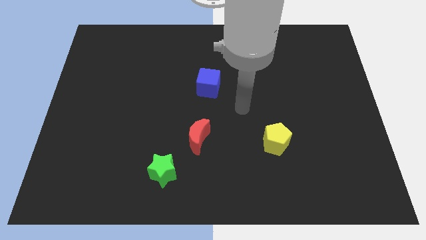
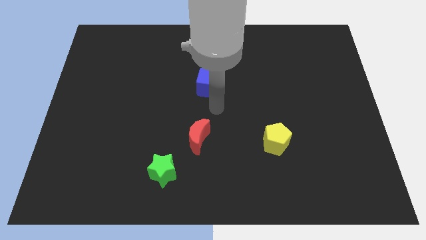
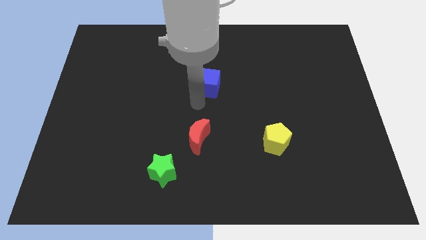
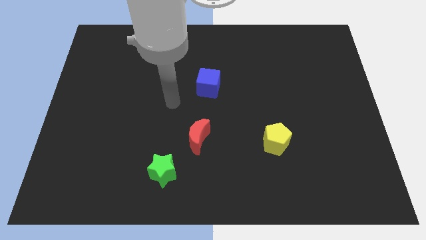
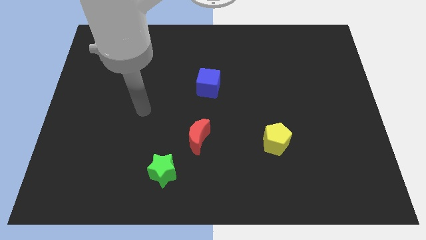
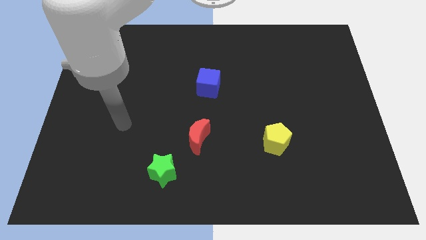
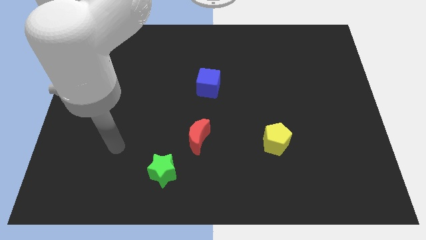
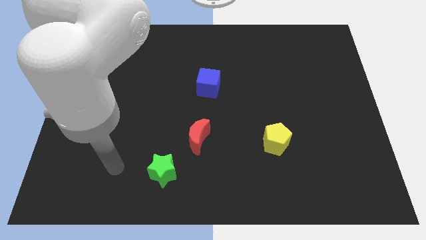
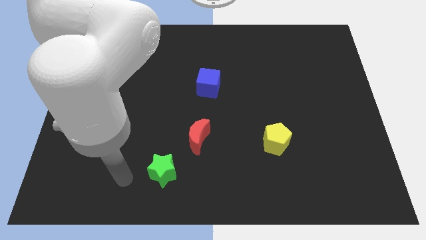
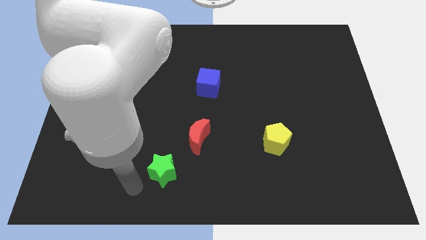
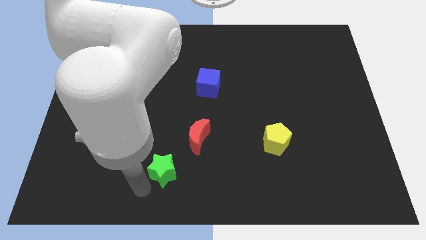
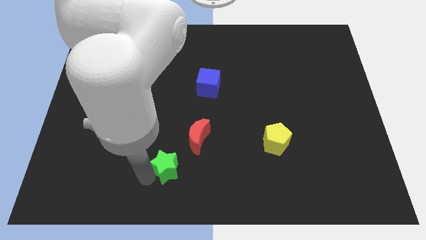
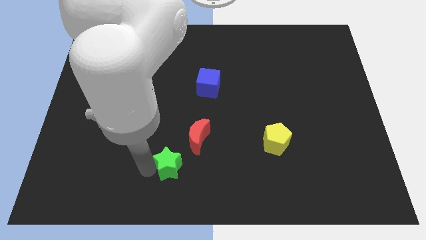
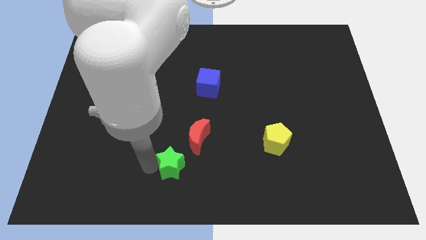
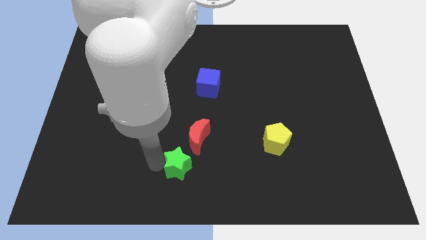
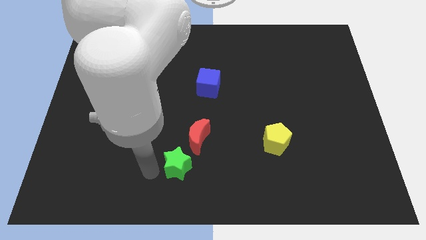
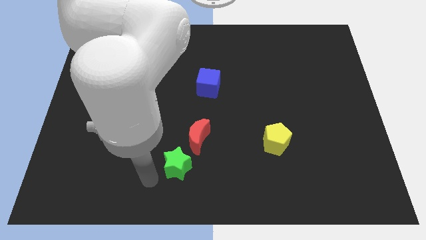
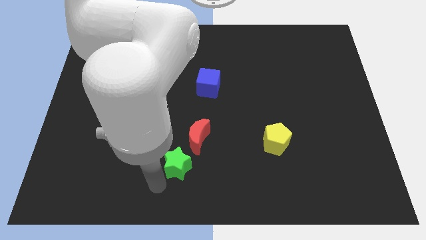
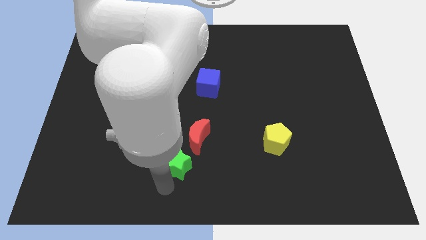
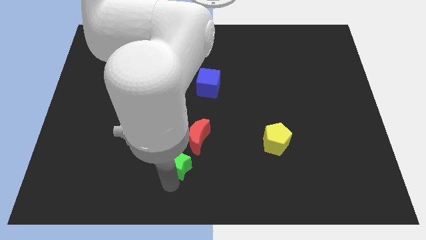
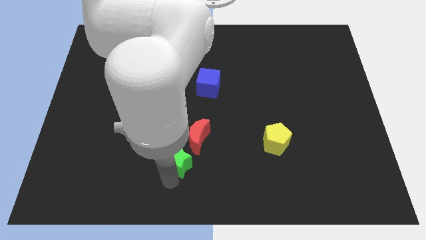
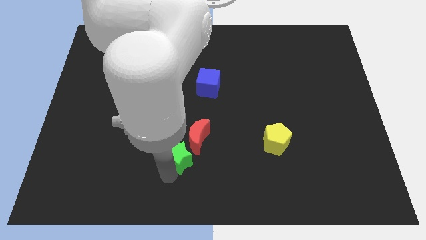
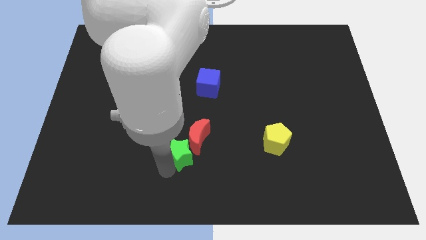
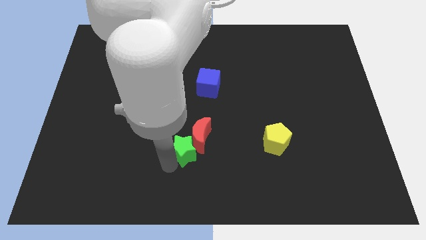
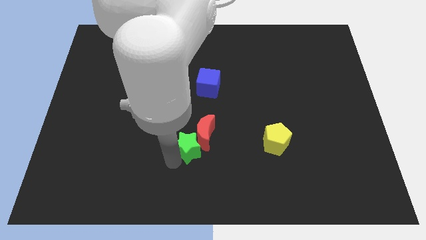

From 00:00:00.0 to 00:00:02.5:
move the green star next to the moon

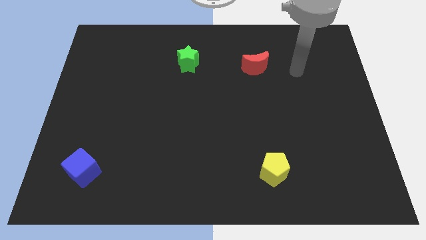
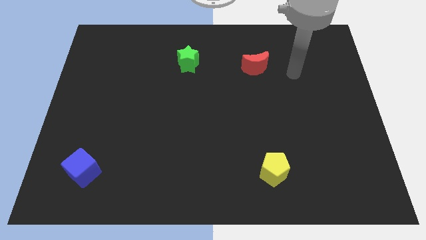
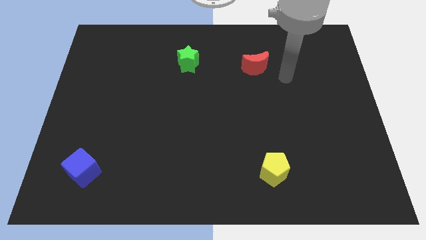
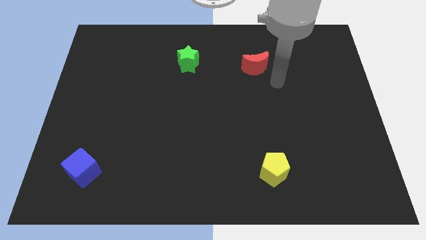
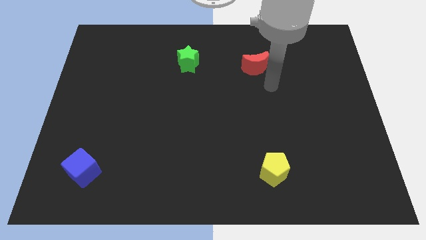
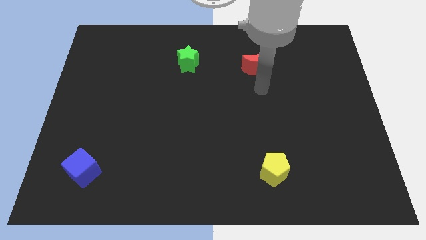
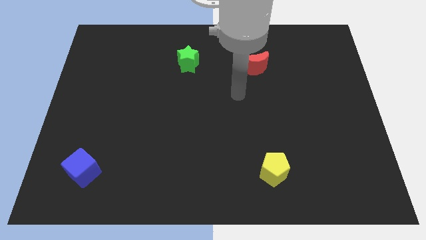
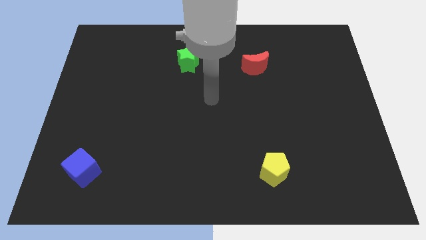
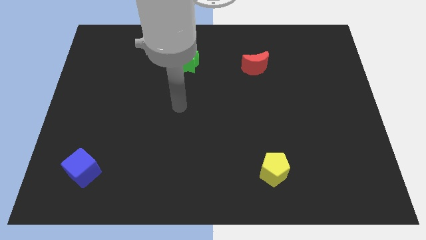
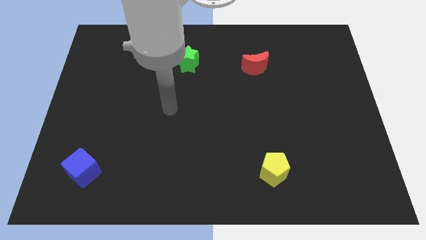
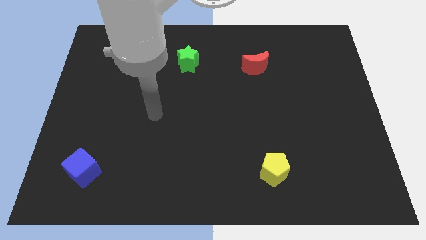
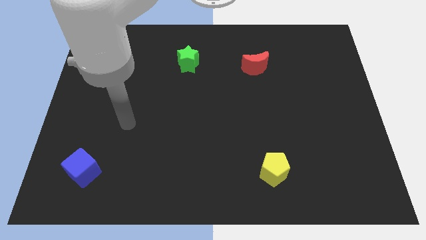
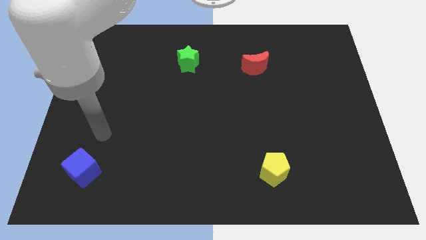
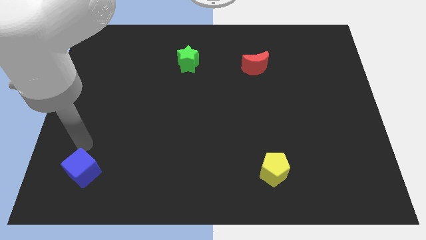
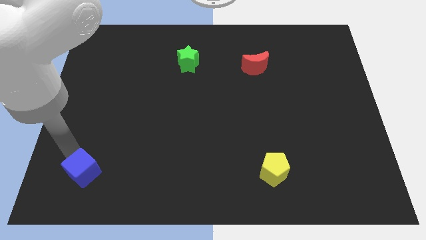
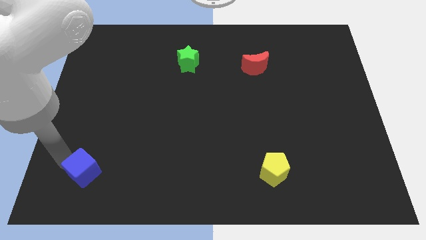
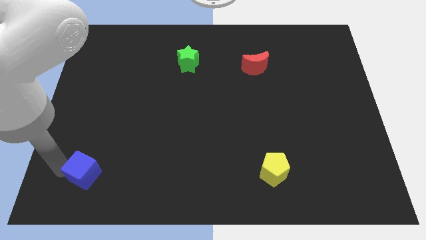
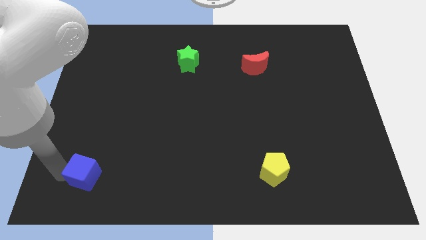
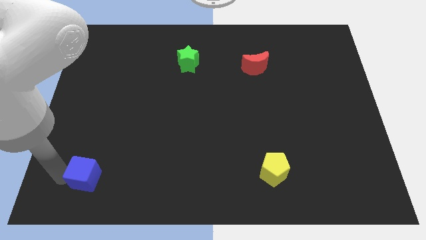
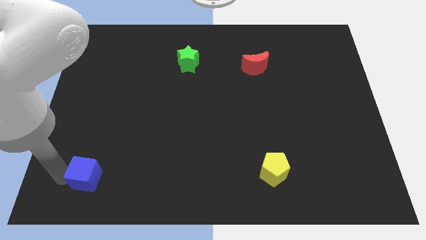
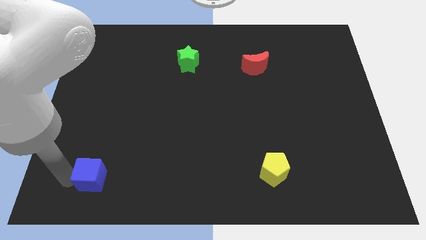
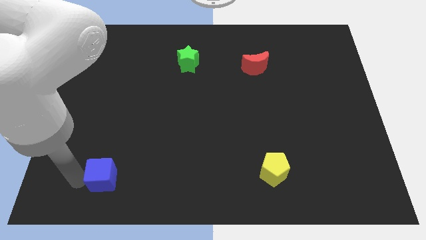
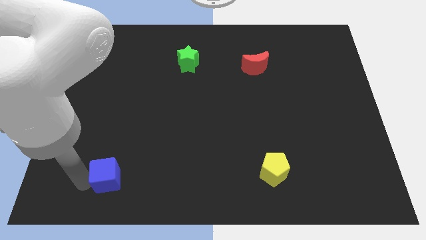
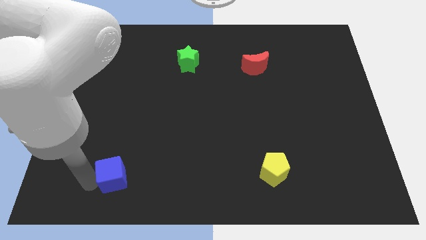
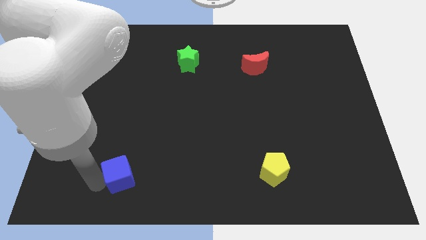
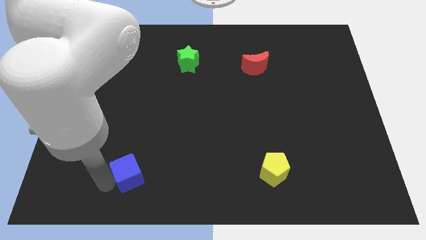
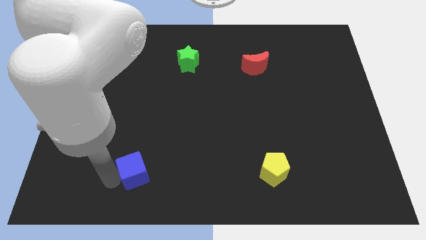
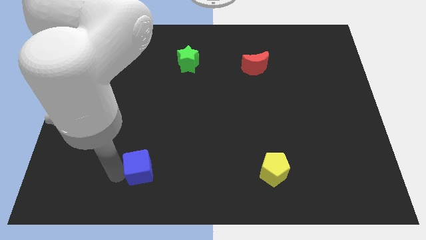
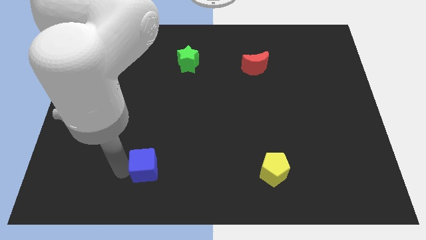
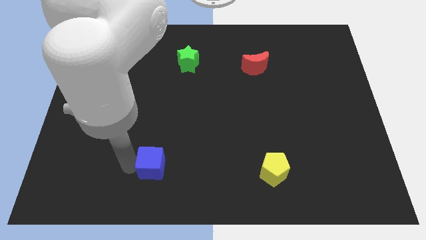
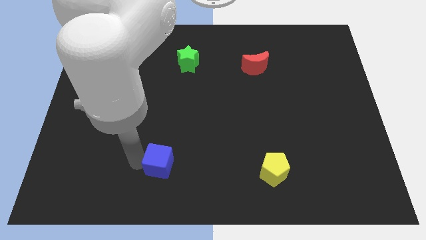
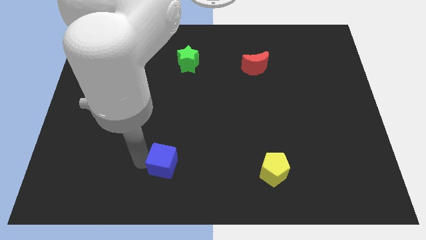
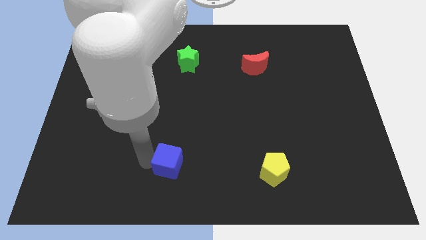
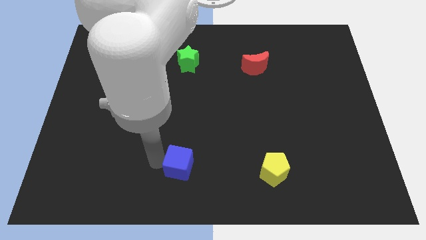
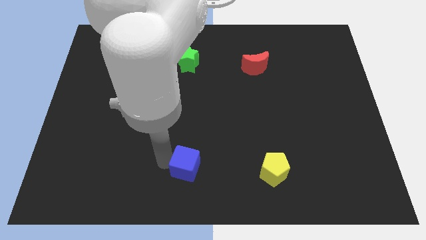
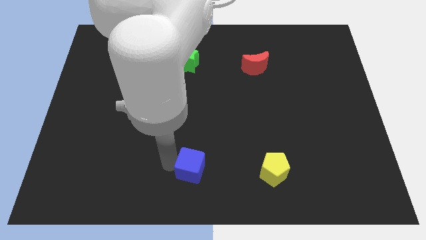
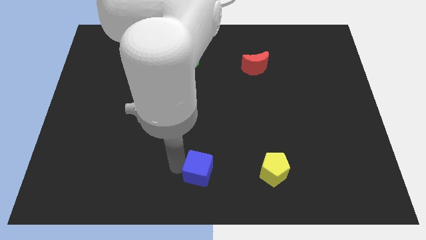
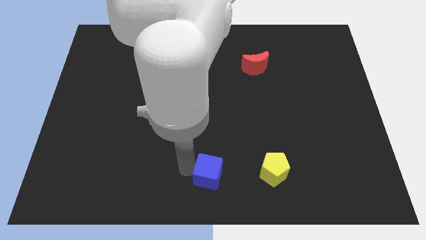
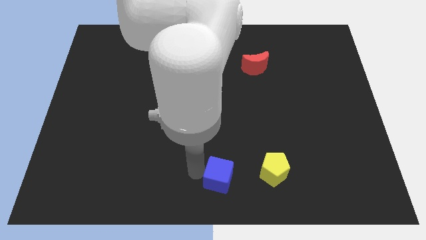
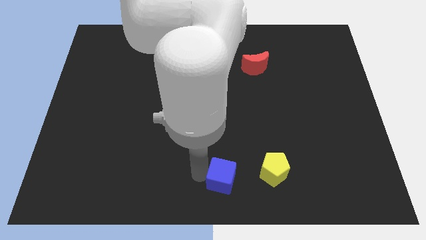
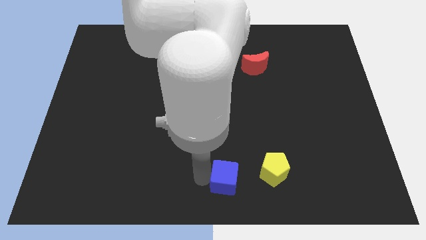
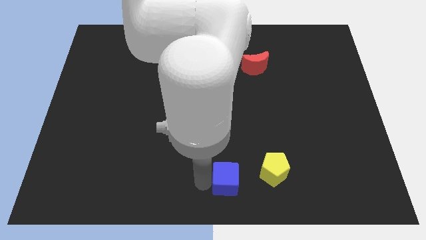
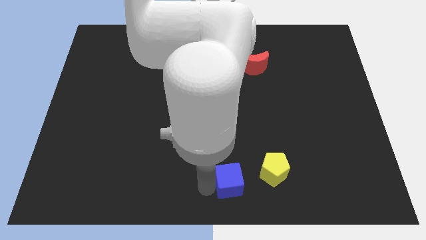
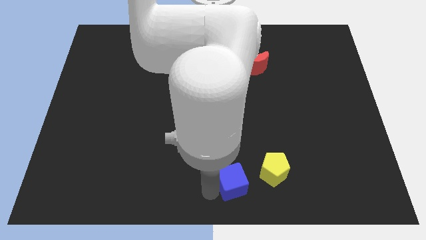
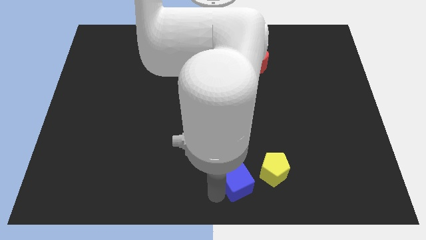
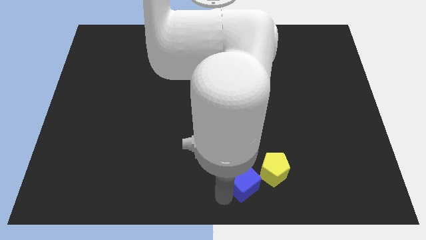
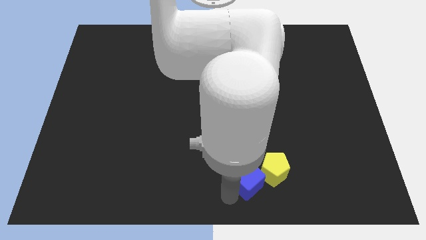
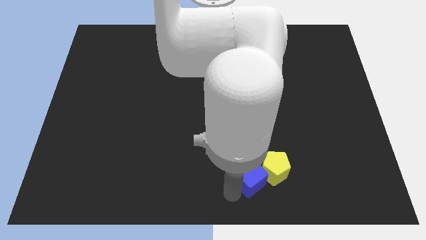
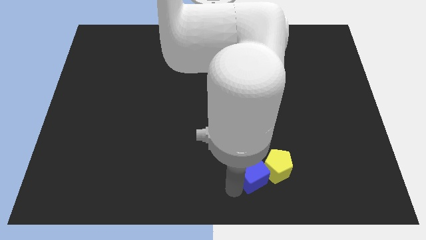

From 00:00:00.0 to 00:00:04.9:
move the blue cube to the yellow pentagon

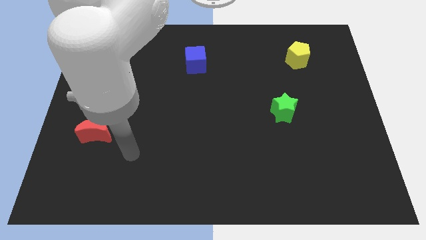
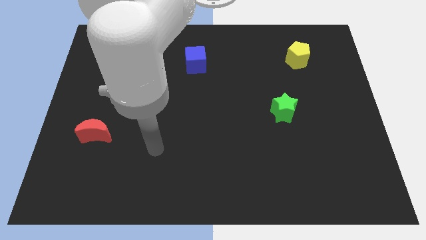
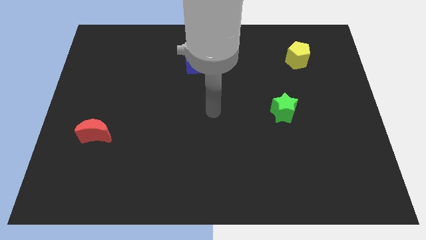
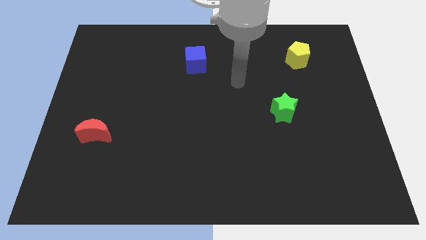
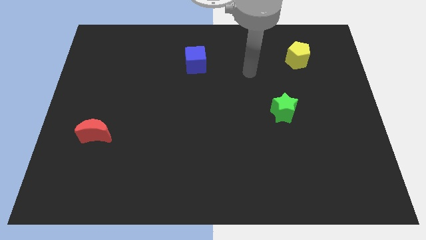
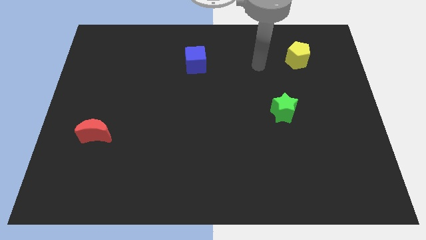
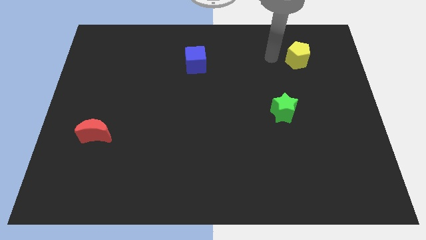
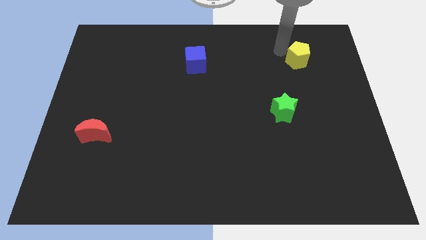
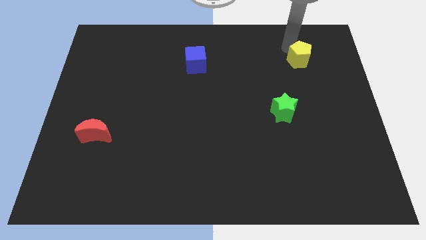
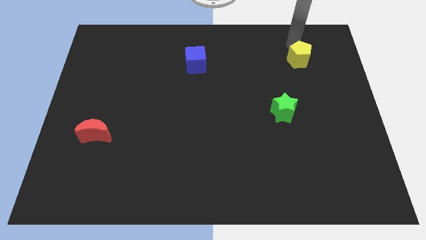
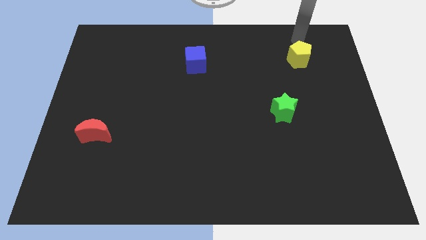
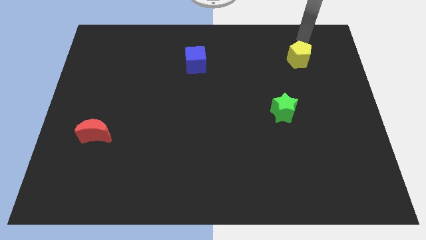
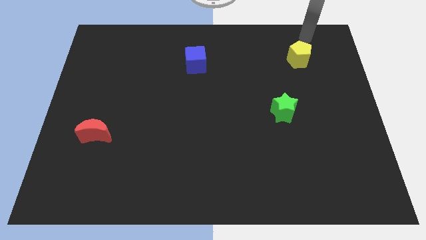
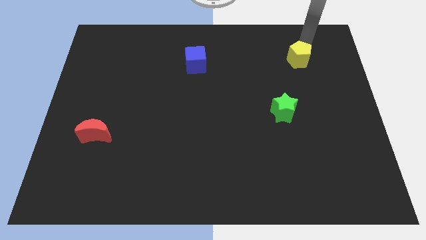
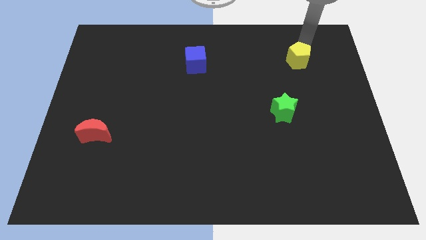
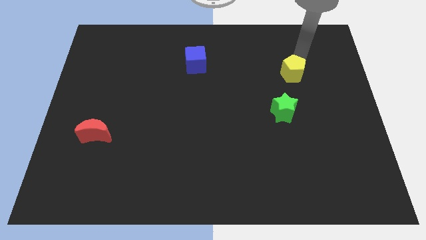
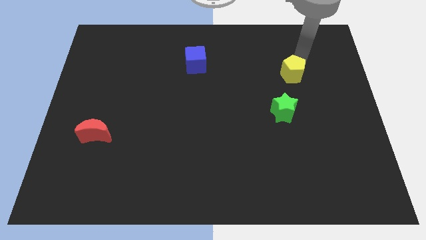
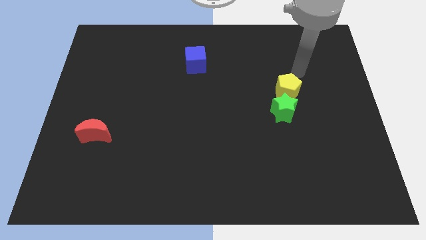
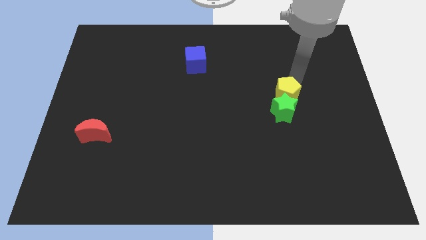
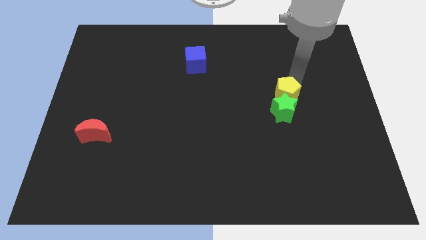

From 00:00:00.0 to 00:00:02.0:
push the yellow block to the green star
